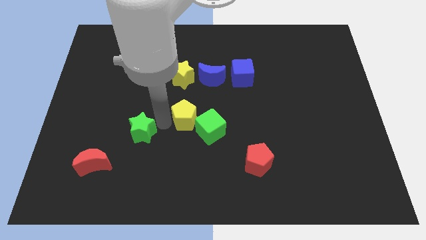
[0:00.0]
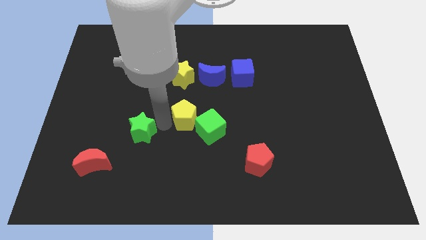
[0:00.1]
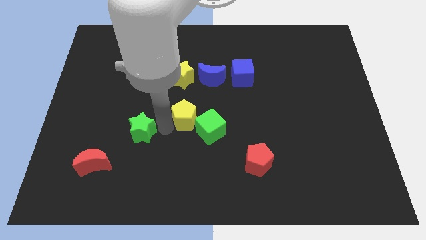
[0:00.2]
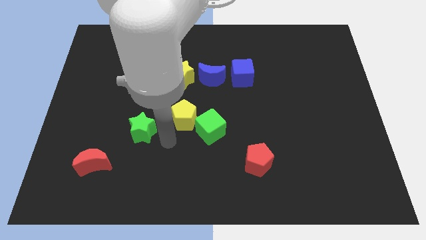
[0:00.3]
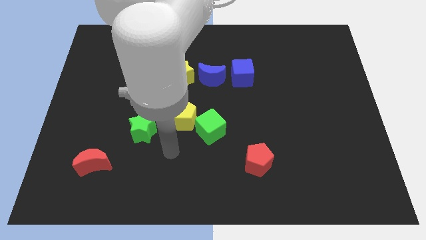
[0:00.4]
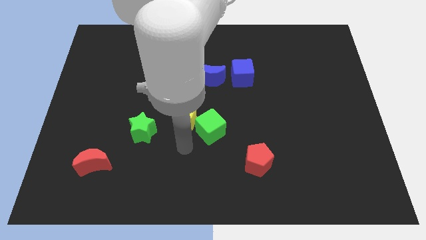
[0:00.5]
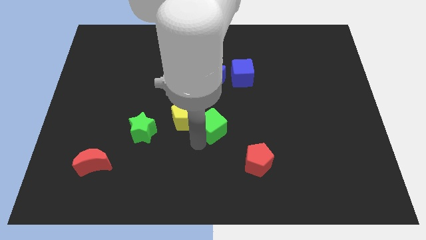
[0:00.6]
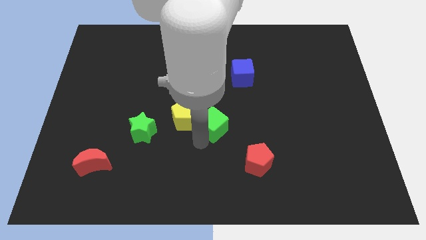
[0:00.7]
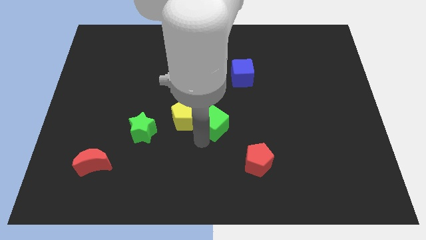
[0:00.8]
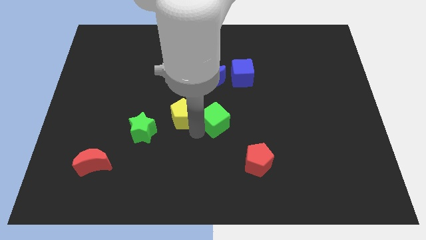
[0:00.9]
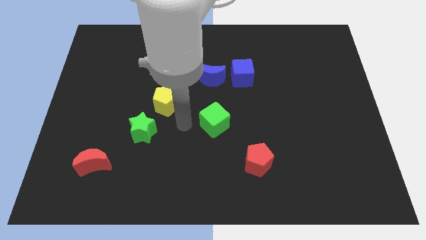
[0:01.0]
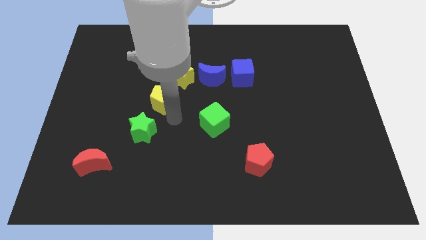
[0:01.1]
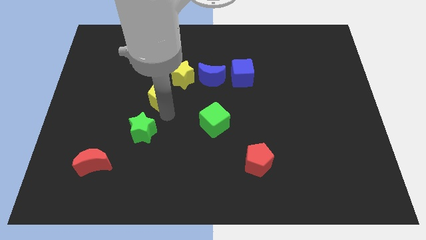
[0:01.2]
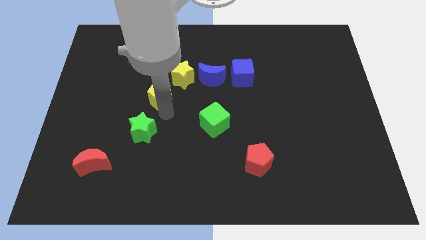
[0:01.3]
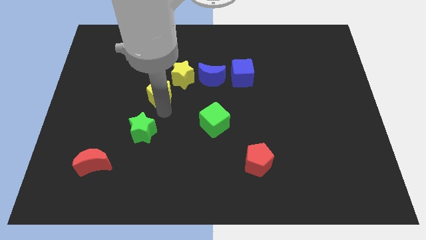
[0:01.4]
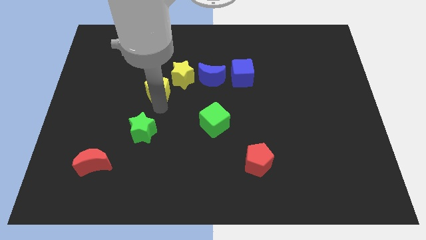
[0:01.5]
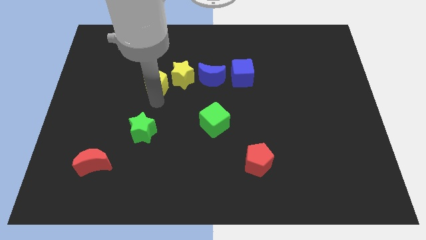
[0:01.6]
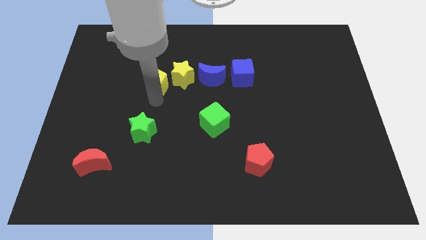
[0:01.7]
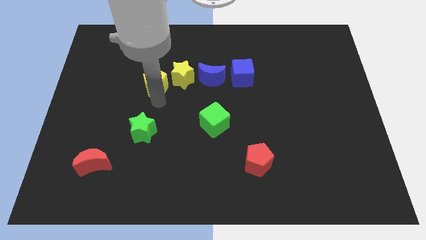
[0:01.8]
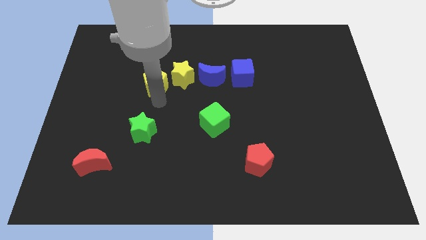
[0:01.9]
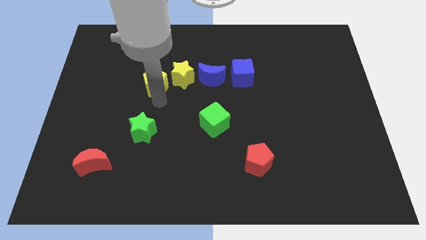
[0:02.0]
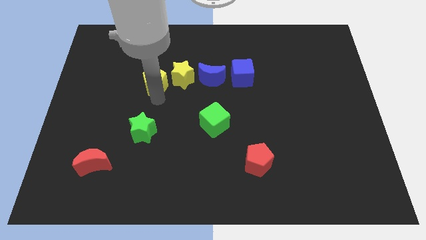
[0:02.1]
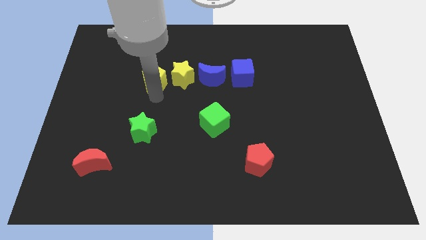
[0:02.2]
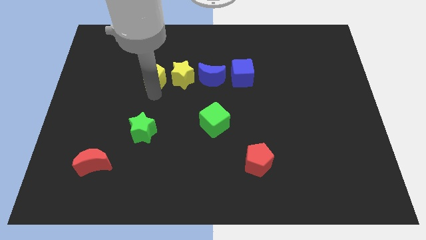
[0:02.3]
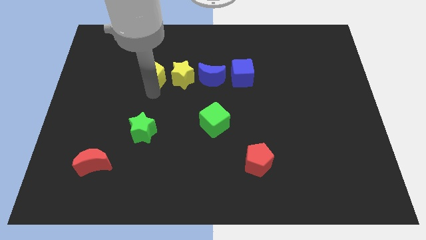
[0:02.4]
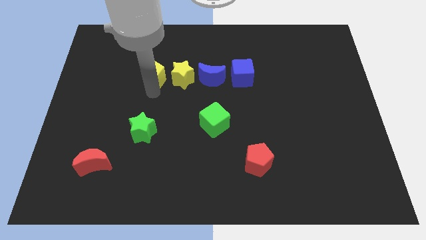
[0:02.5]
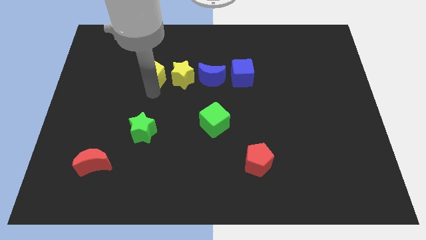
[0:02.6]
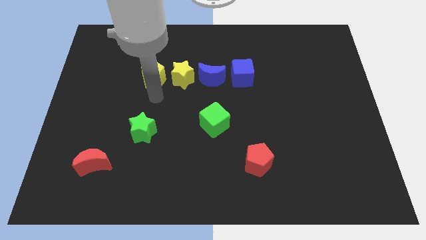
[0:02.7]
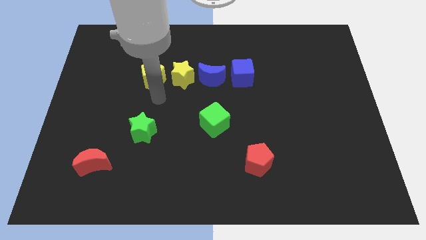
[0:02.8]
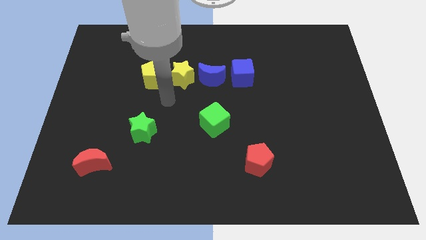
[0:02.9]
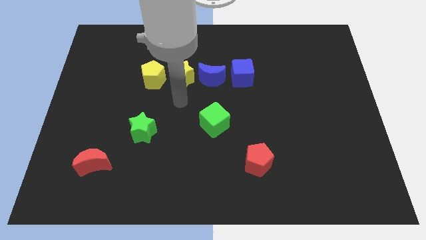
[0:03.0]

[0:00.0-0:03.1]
slide yellow pentagon to the left of yellow star

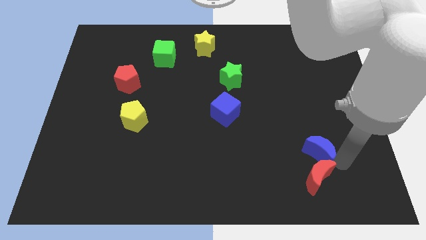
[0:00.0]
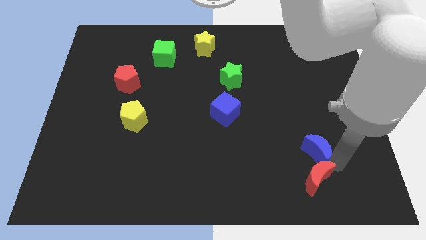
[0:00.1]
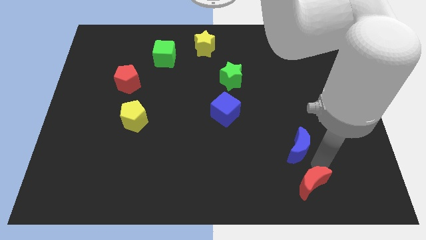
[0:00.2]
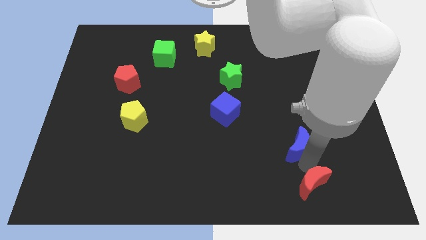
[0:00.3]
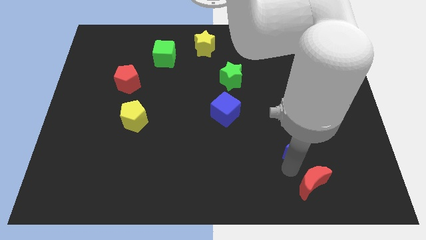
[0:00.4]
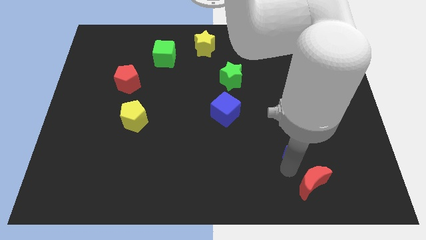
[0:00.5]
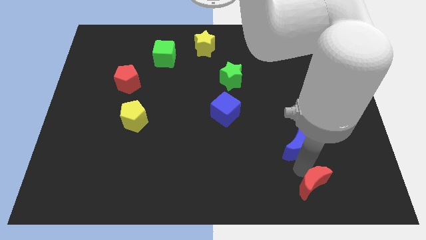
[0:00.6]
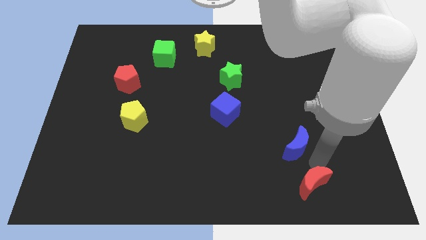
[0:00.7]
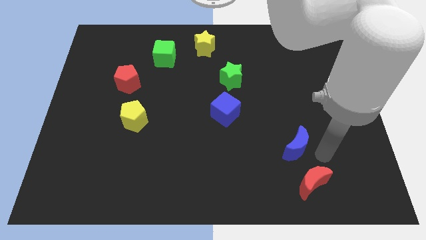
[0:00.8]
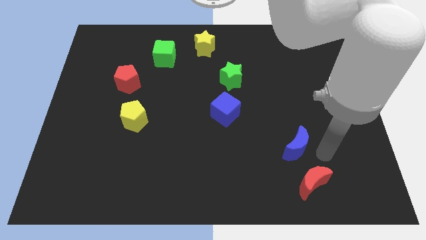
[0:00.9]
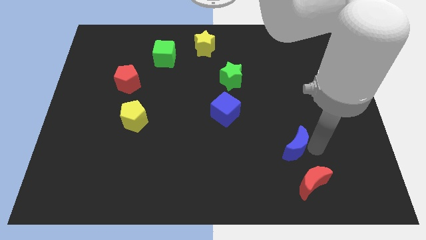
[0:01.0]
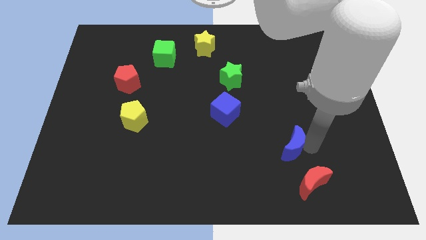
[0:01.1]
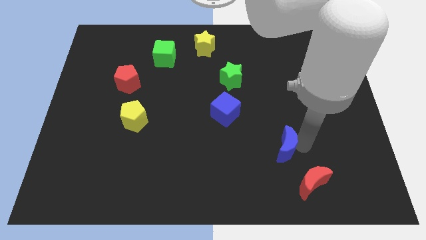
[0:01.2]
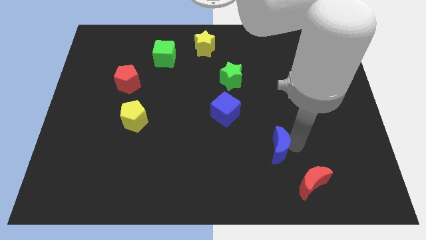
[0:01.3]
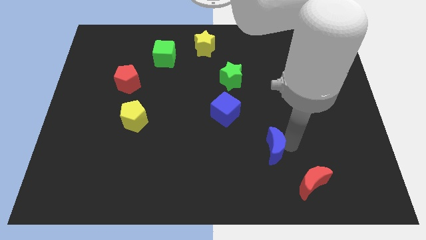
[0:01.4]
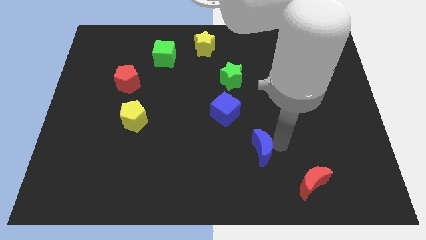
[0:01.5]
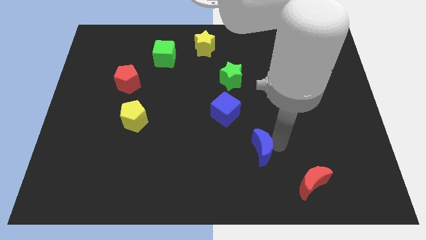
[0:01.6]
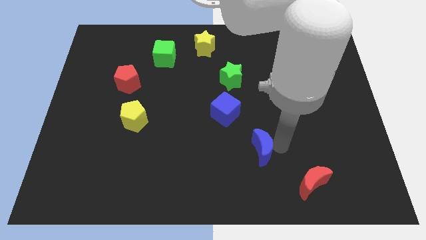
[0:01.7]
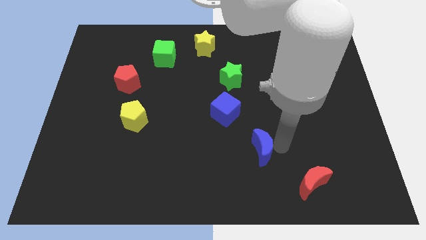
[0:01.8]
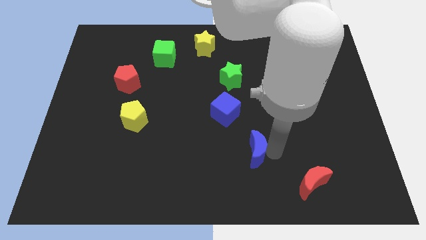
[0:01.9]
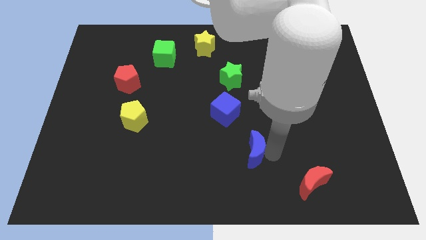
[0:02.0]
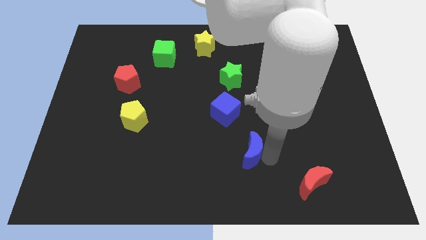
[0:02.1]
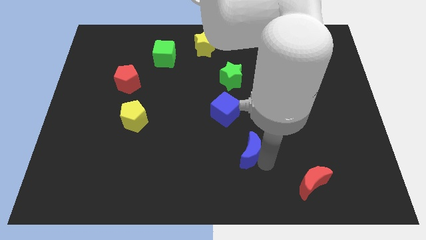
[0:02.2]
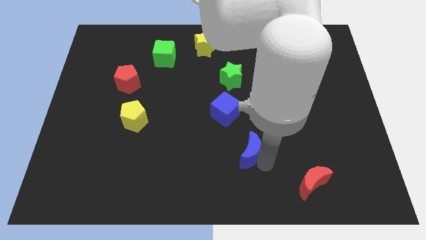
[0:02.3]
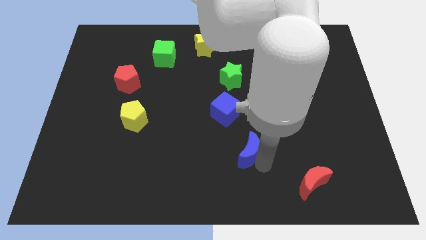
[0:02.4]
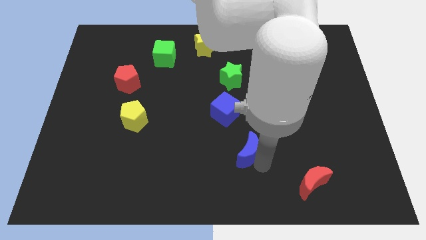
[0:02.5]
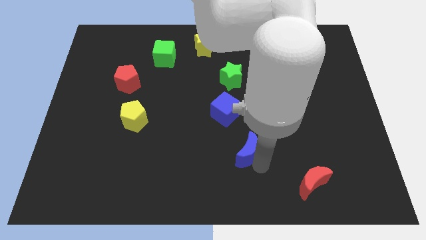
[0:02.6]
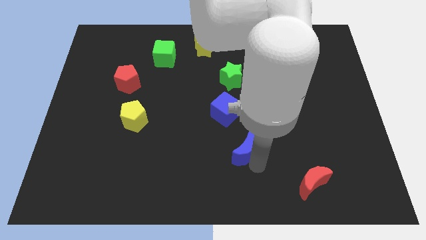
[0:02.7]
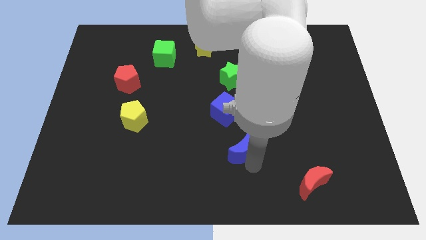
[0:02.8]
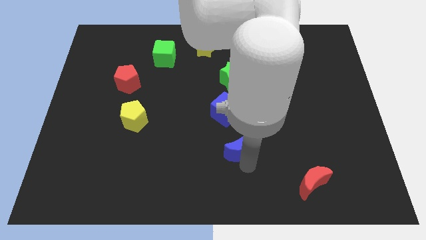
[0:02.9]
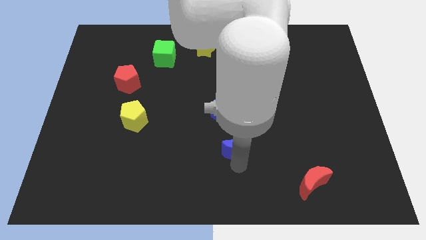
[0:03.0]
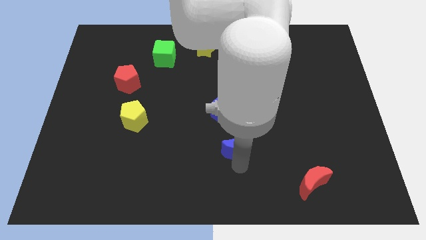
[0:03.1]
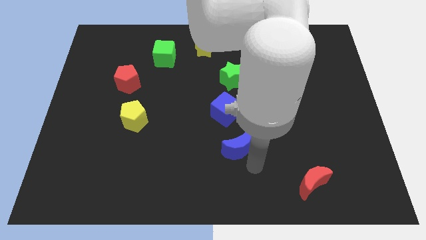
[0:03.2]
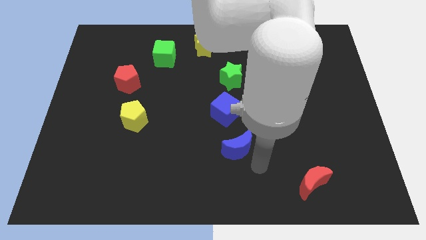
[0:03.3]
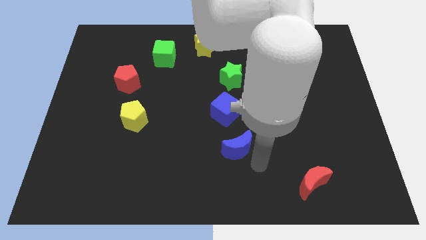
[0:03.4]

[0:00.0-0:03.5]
place the blue crescent vertically blue cube

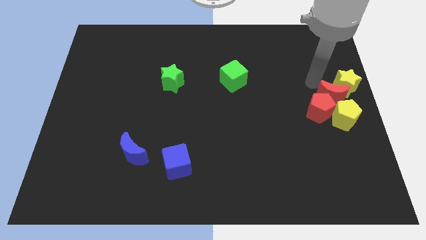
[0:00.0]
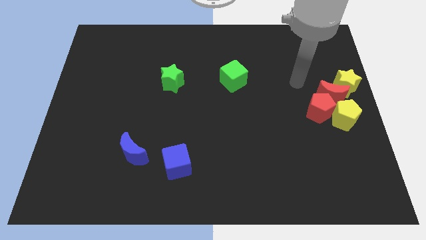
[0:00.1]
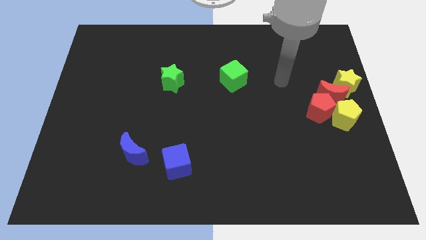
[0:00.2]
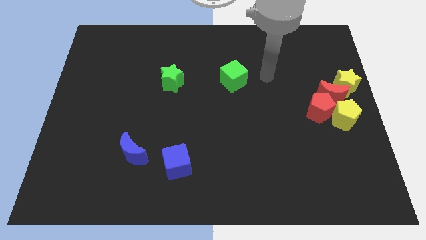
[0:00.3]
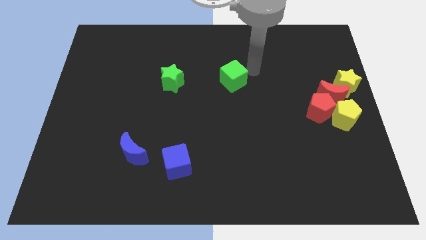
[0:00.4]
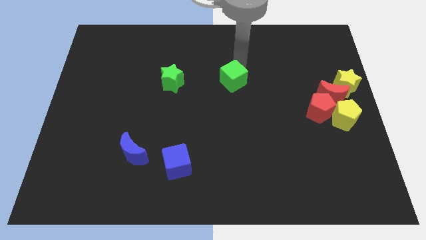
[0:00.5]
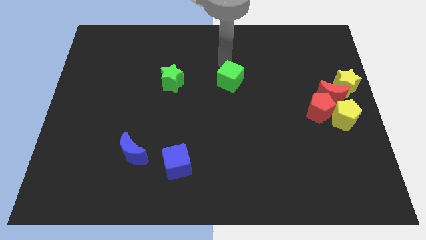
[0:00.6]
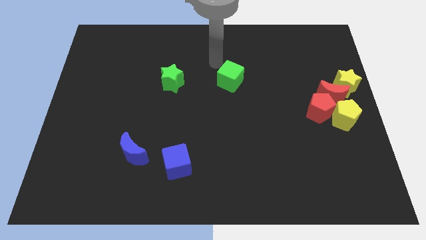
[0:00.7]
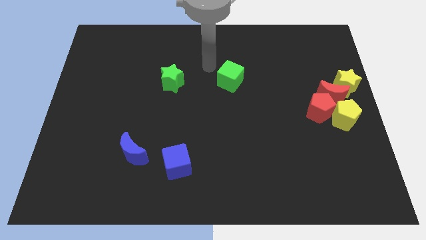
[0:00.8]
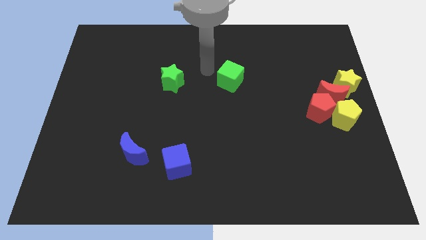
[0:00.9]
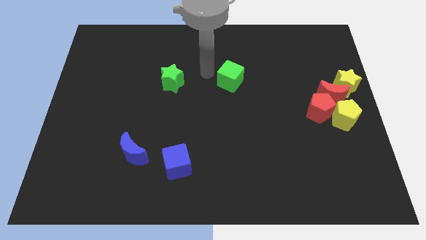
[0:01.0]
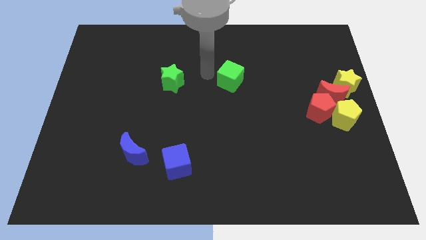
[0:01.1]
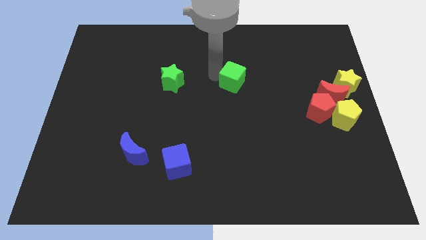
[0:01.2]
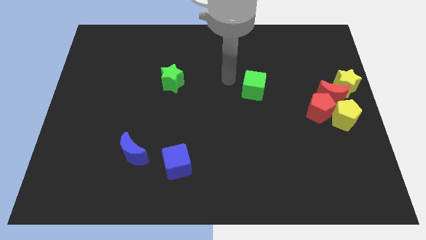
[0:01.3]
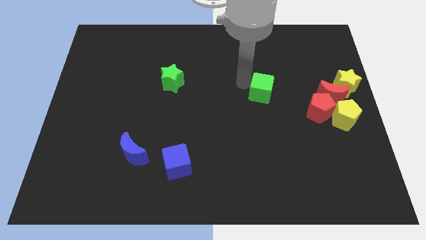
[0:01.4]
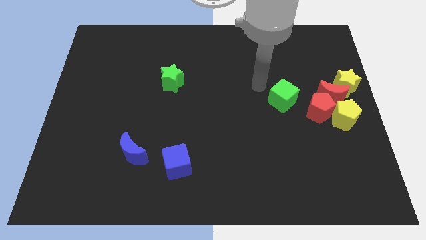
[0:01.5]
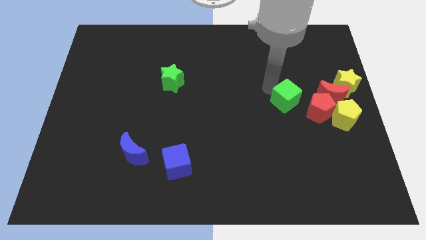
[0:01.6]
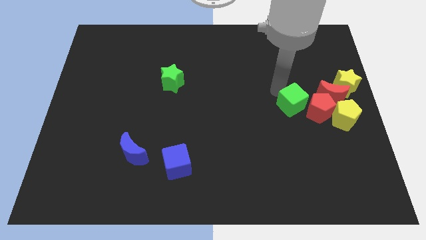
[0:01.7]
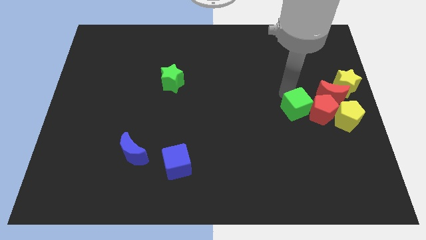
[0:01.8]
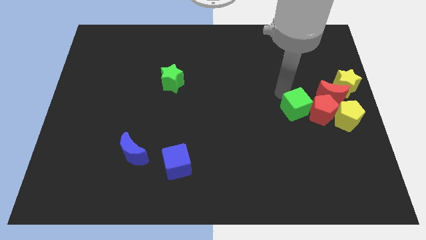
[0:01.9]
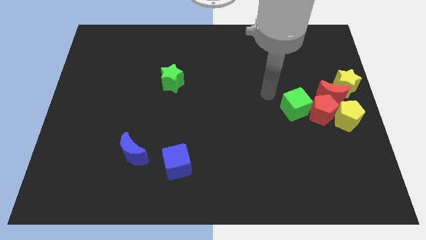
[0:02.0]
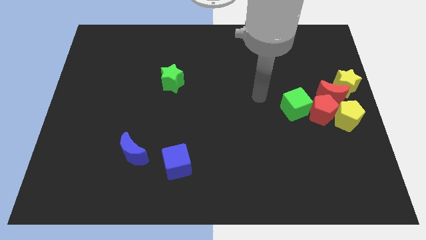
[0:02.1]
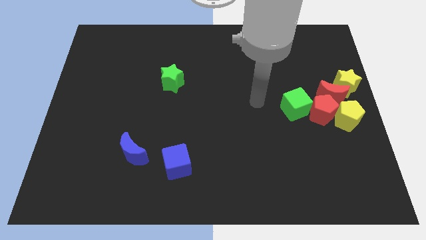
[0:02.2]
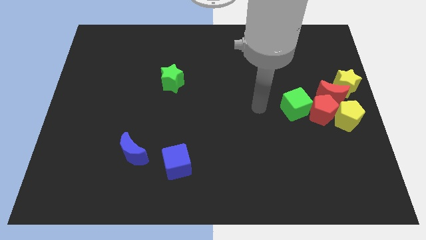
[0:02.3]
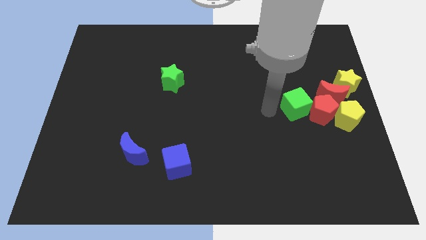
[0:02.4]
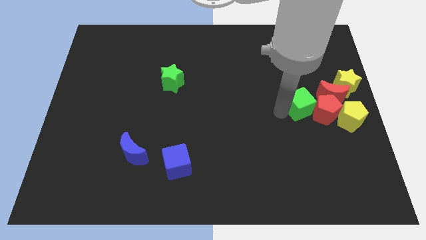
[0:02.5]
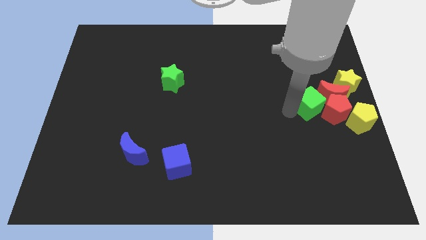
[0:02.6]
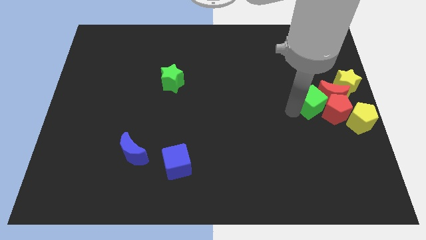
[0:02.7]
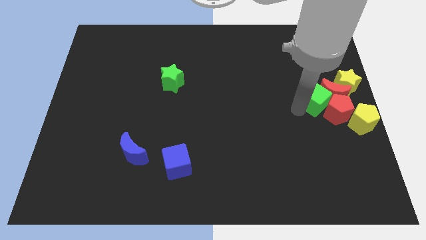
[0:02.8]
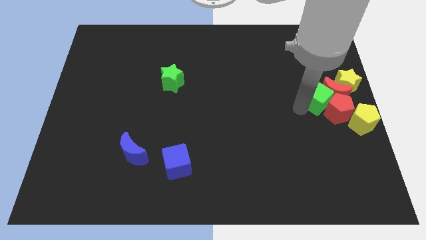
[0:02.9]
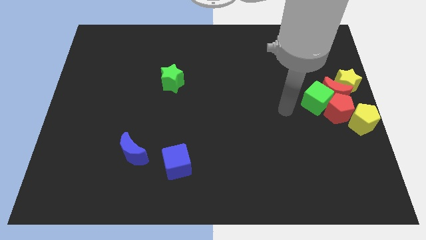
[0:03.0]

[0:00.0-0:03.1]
push green cube into the red pentagon
